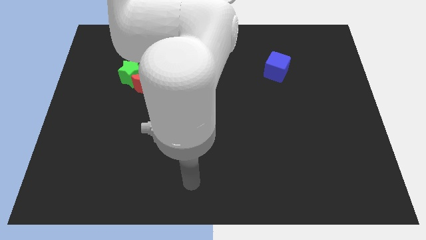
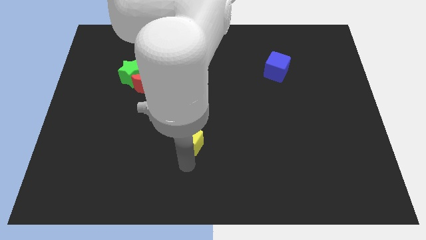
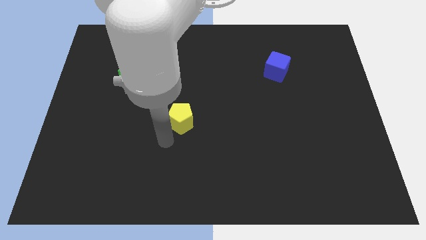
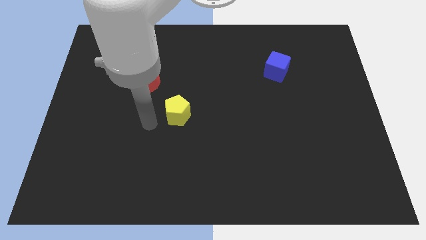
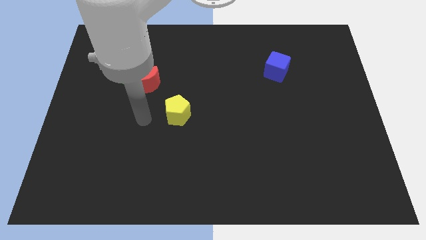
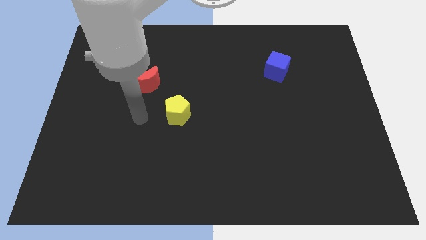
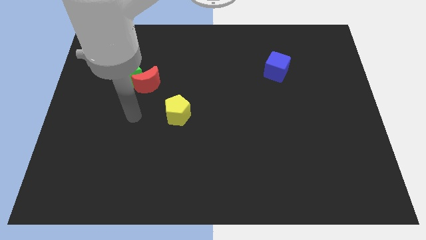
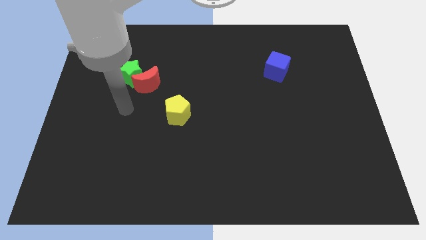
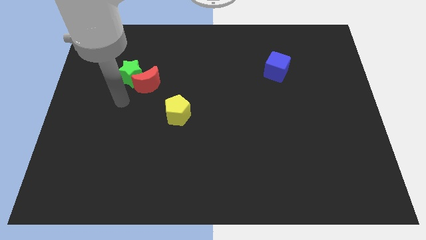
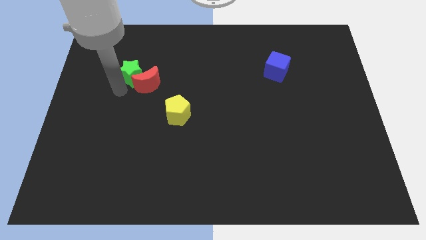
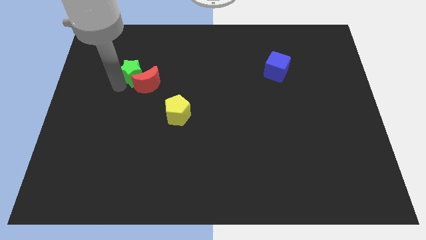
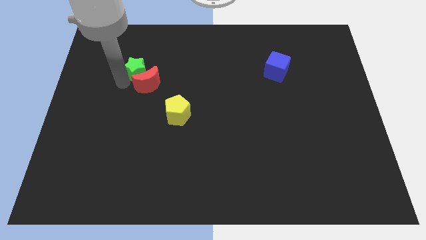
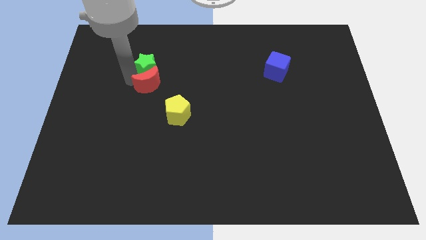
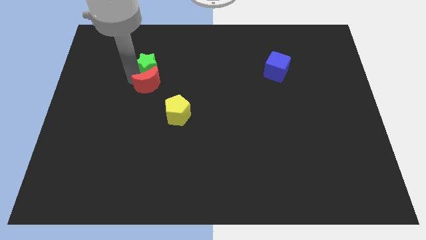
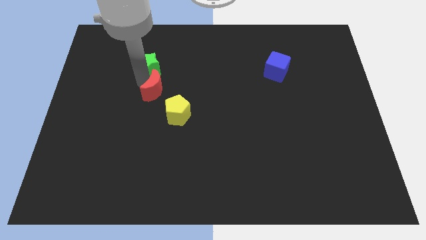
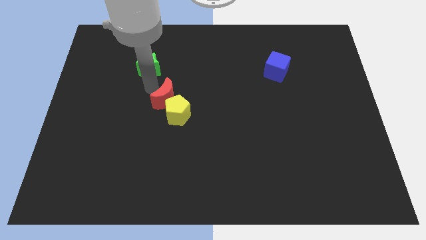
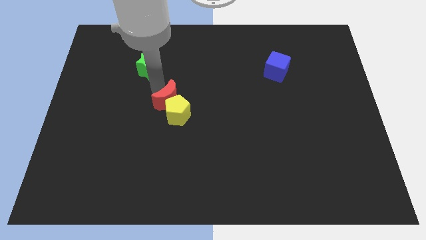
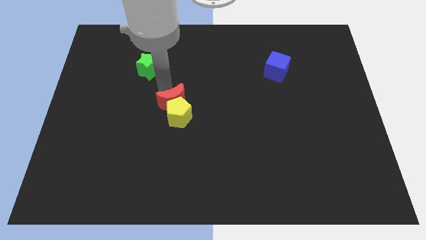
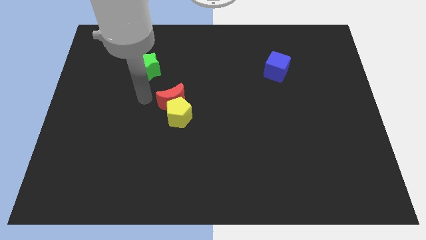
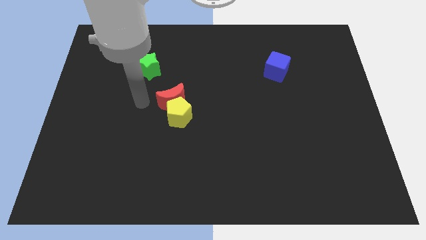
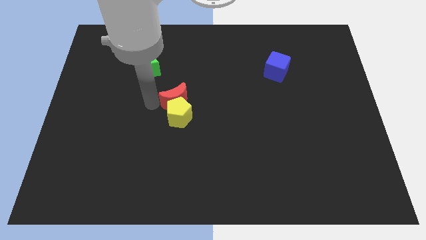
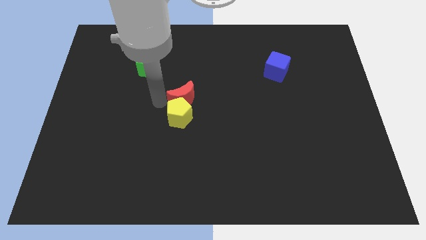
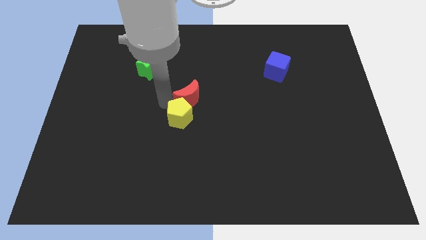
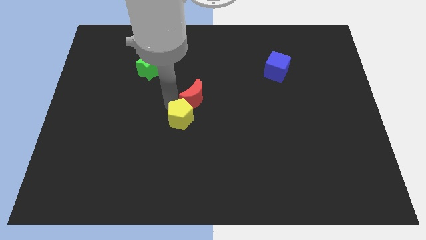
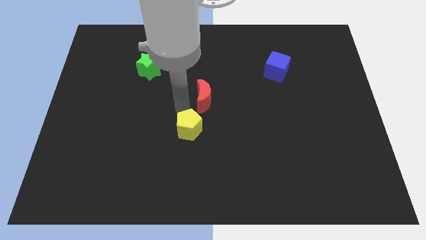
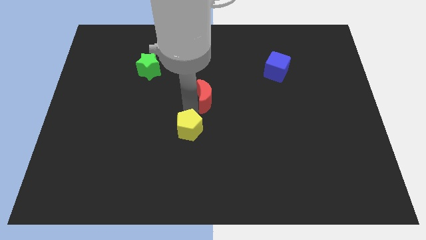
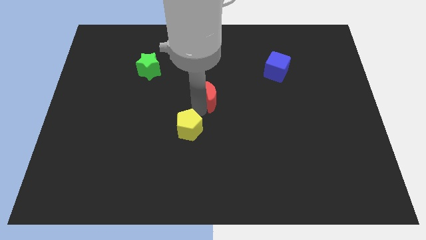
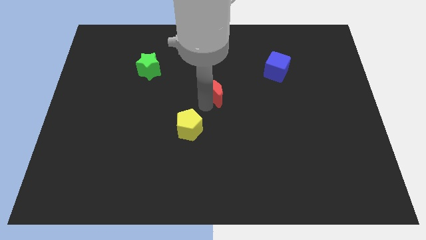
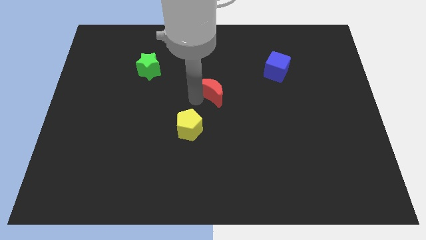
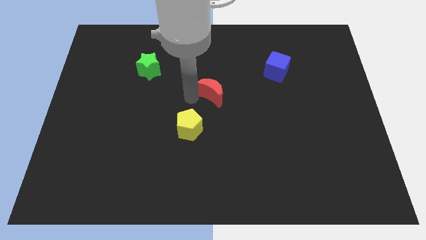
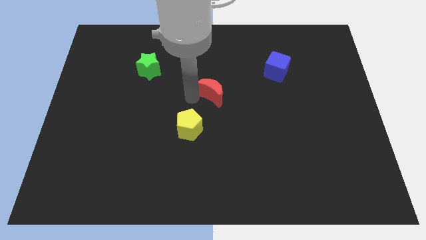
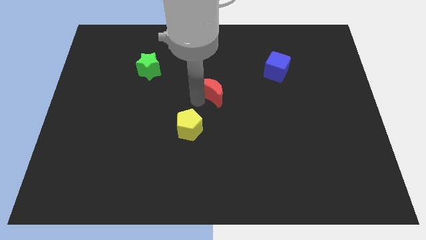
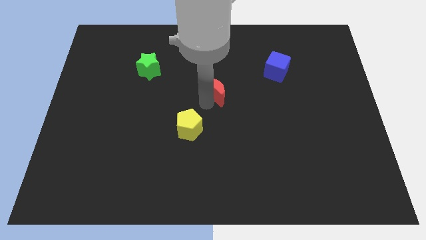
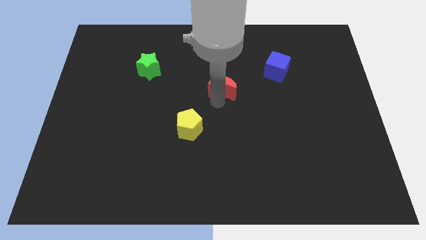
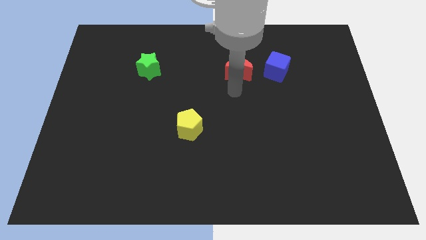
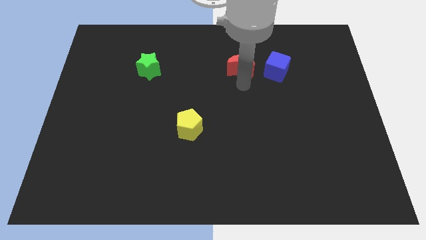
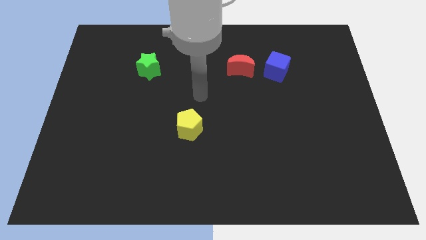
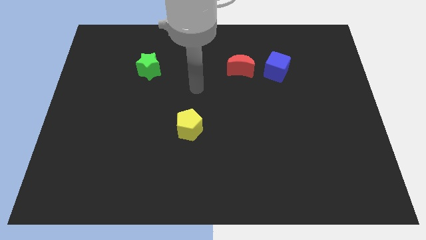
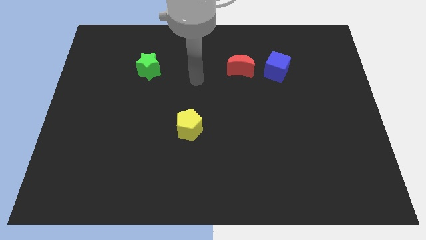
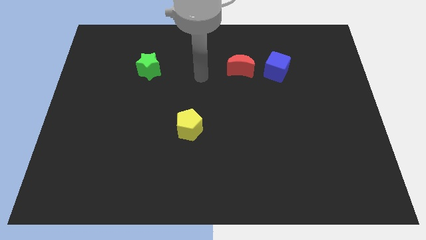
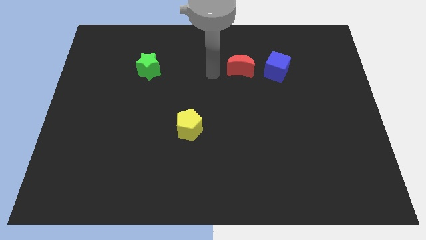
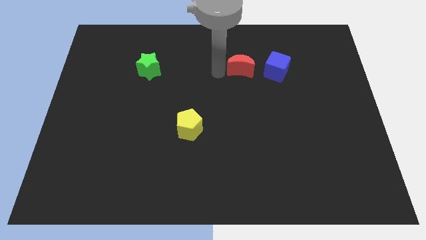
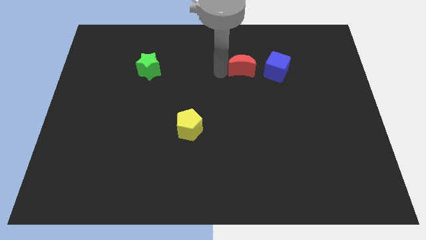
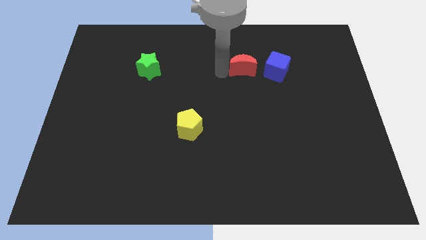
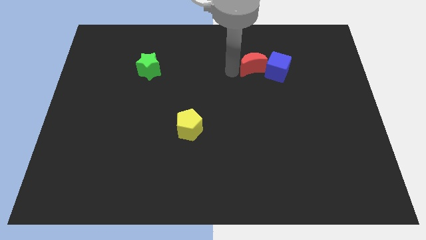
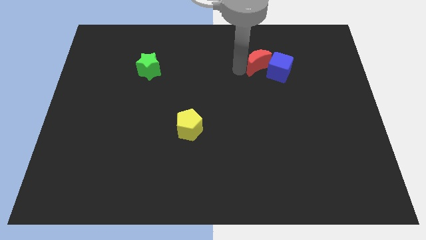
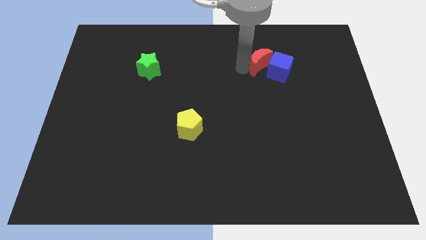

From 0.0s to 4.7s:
push the red moon to the cube

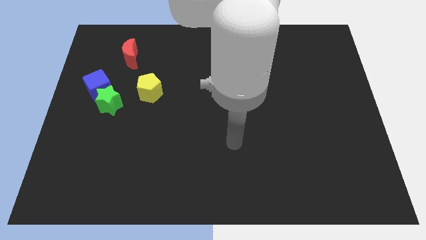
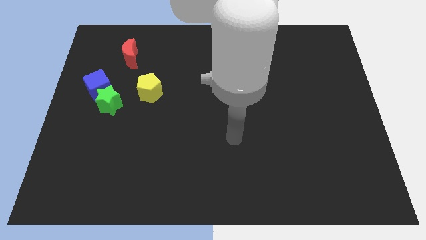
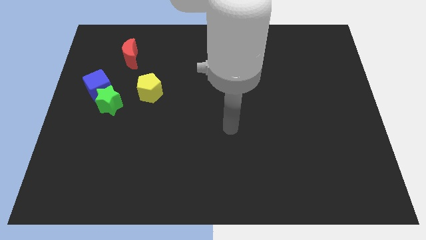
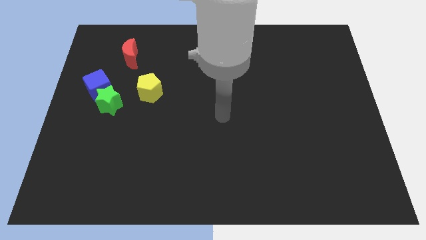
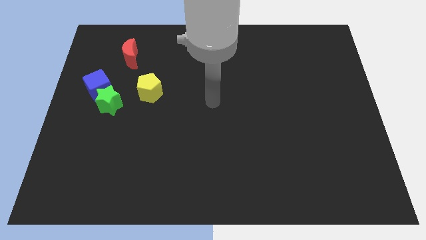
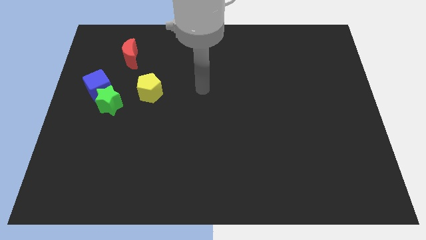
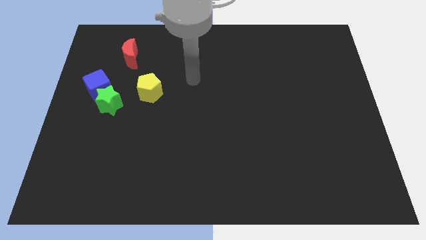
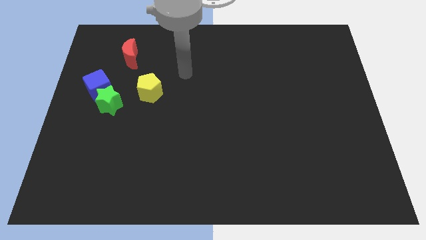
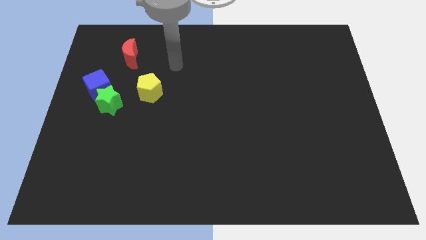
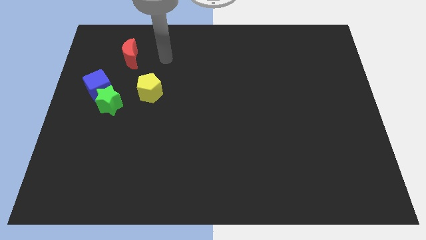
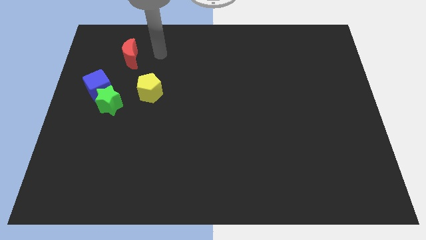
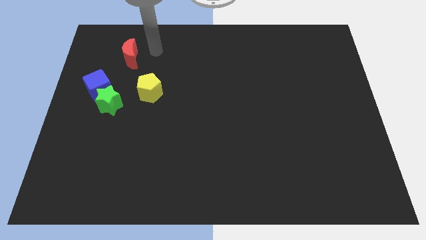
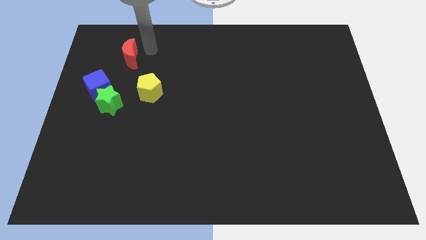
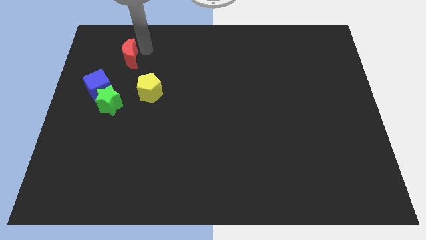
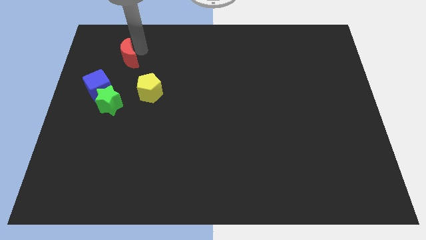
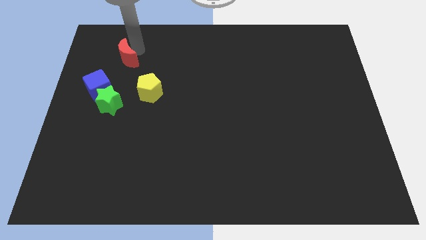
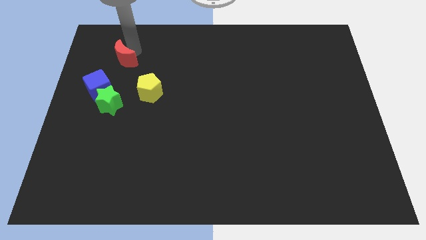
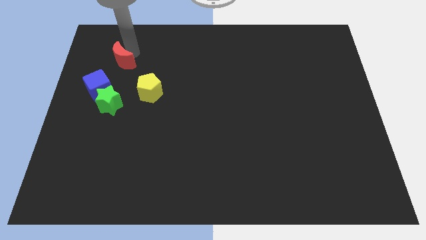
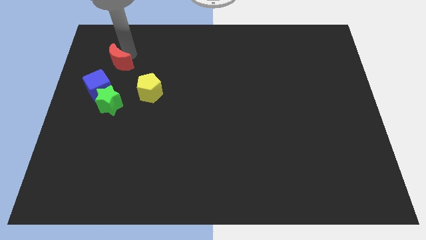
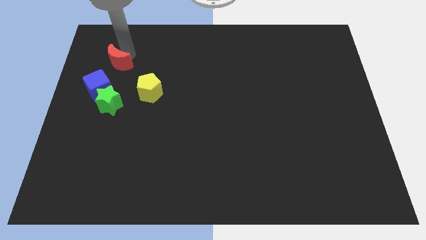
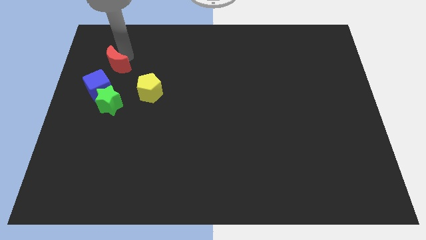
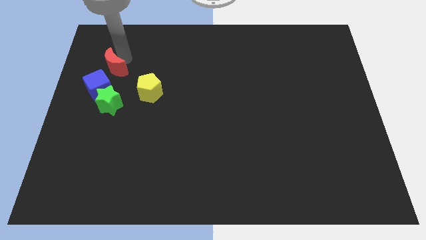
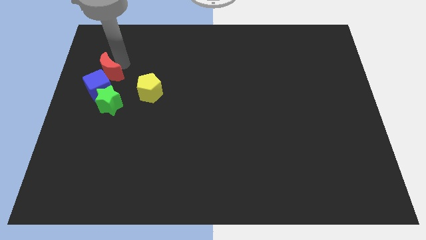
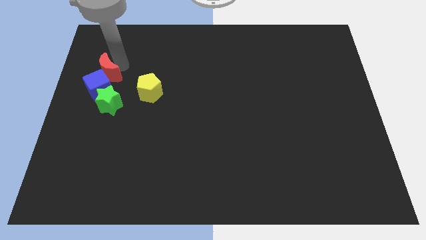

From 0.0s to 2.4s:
move the moon towards the blue block

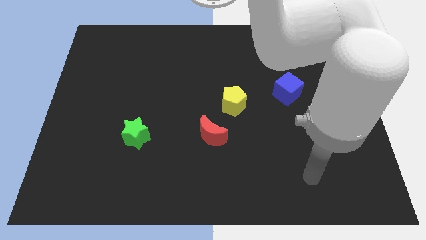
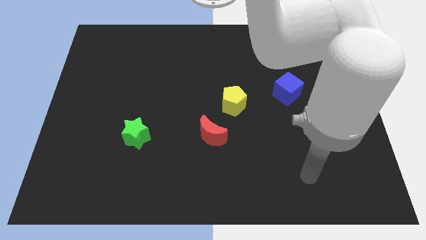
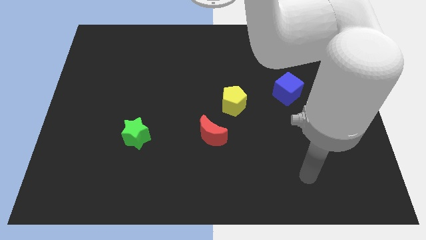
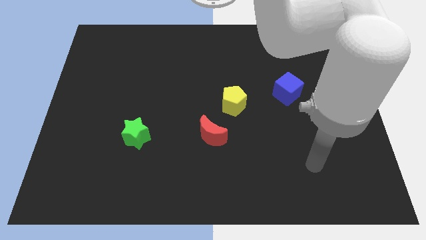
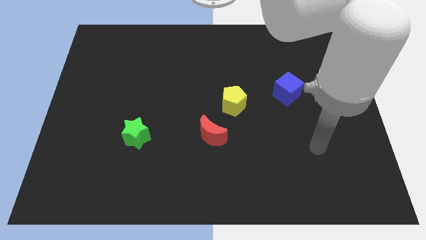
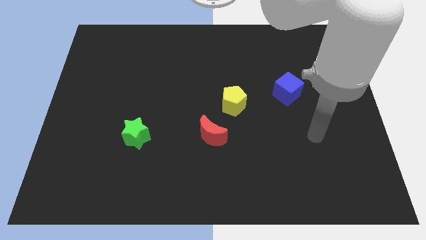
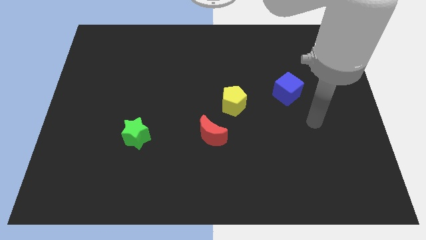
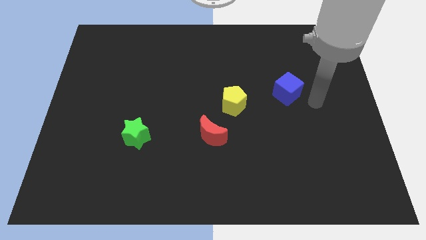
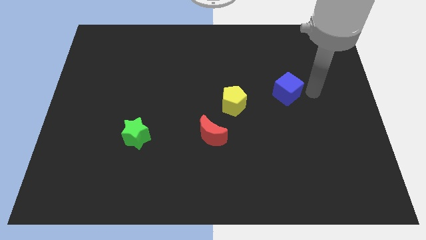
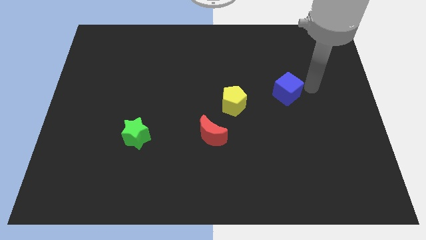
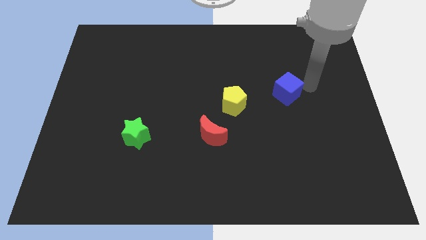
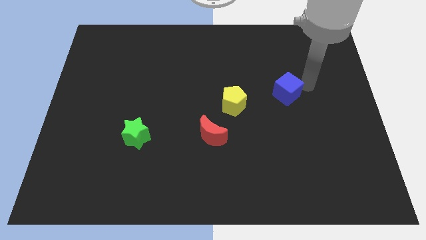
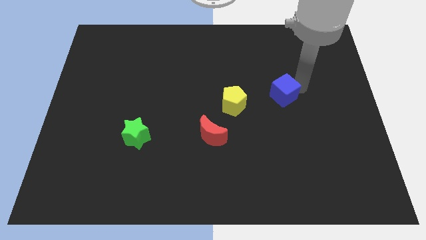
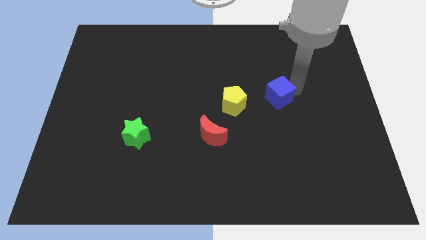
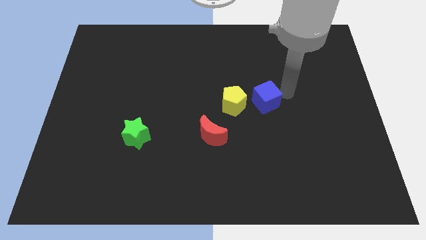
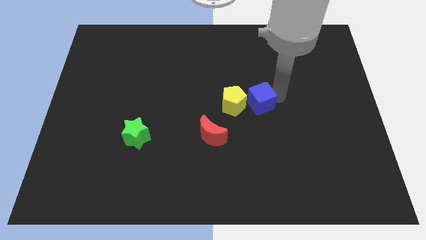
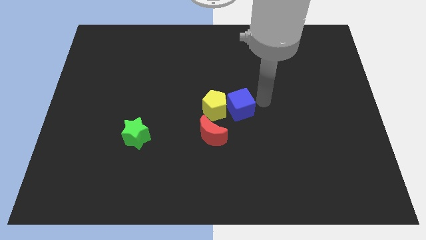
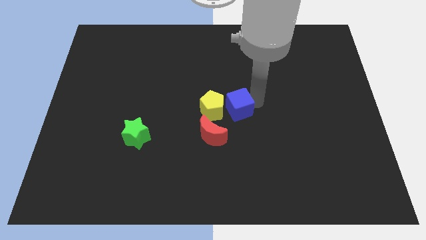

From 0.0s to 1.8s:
put the blue block to the yellow block

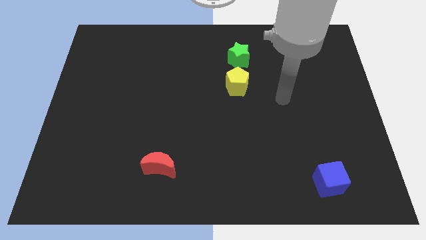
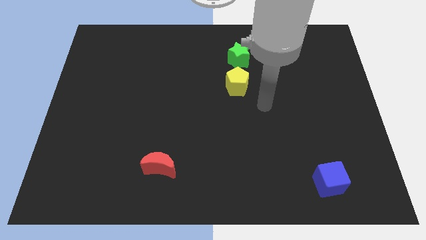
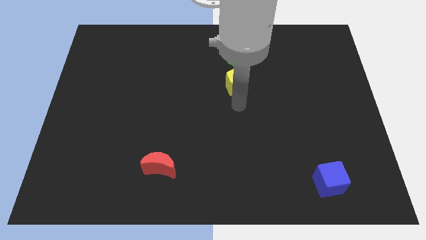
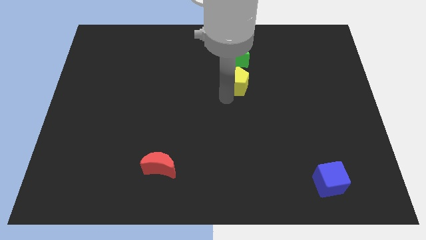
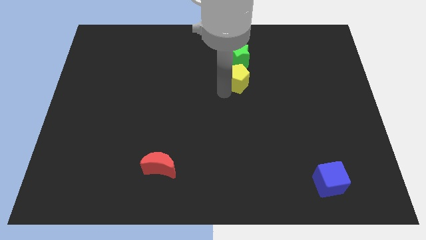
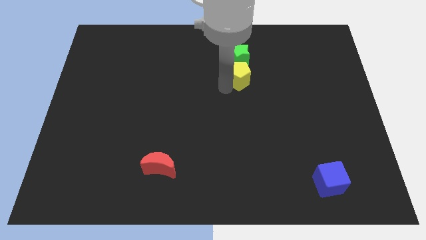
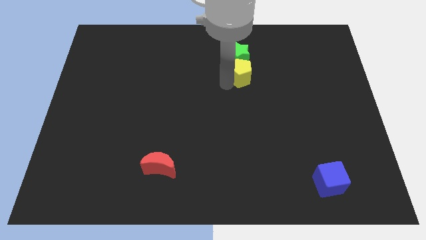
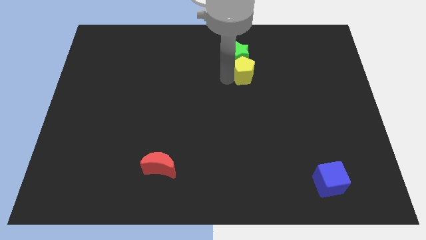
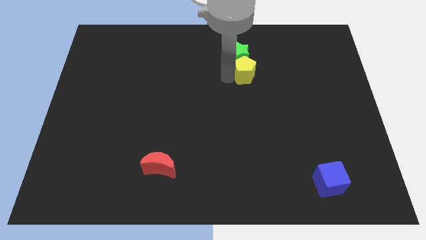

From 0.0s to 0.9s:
slide the pentagon to the star
